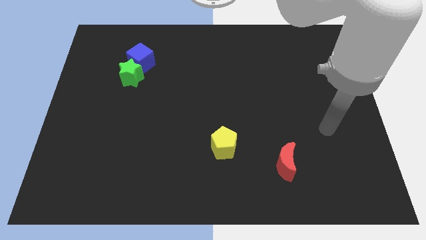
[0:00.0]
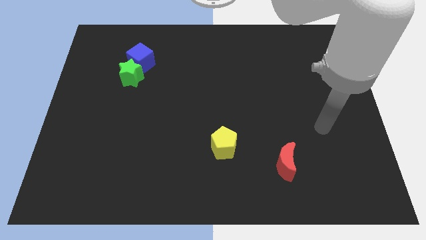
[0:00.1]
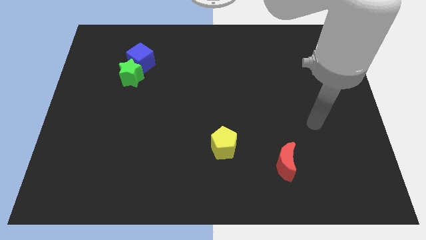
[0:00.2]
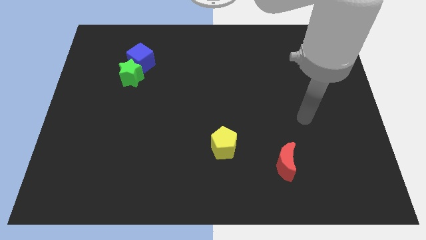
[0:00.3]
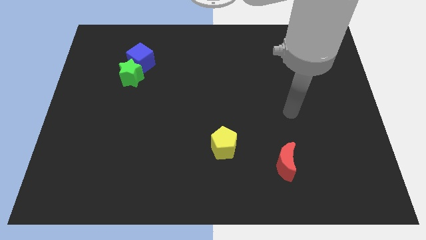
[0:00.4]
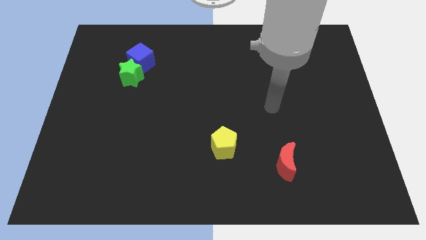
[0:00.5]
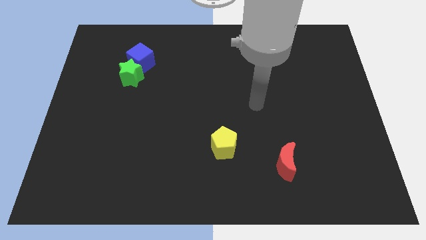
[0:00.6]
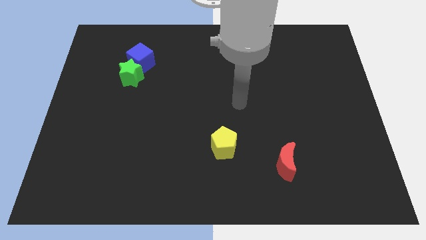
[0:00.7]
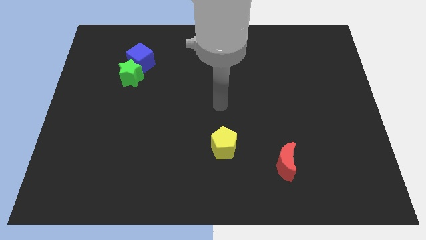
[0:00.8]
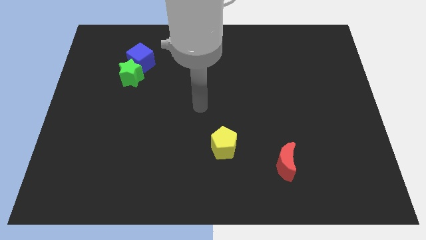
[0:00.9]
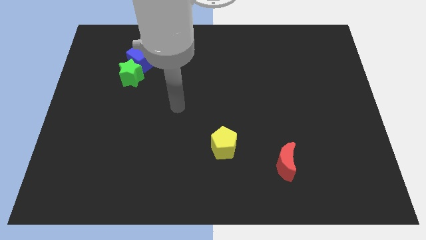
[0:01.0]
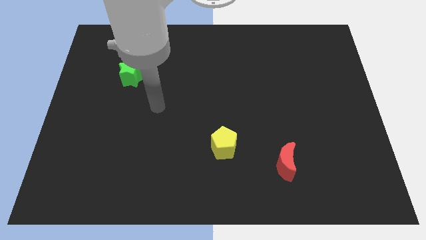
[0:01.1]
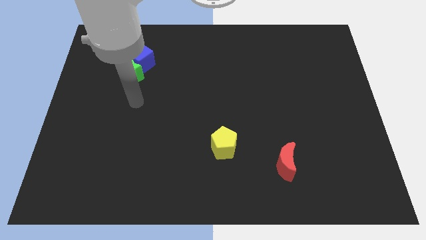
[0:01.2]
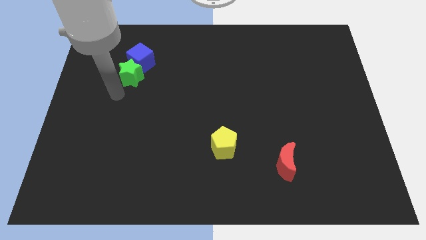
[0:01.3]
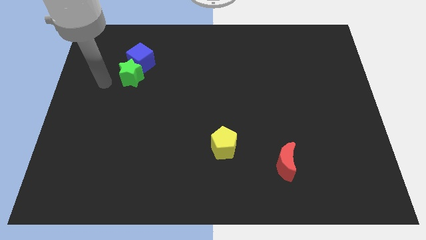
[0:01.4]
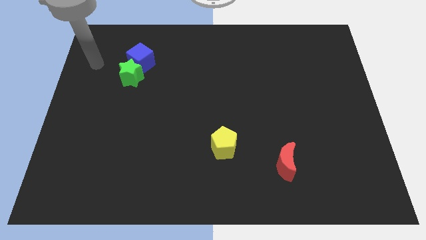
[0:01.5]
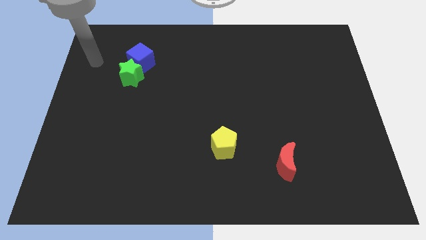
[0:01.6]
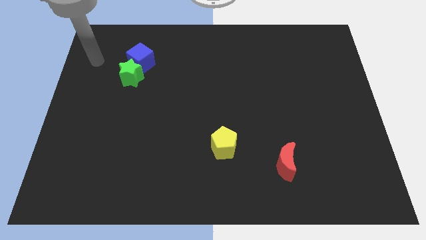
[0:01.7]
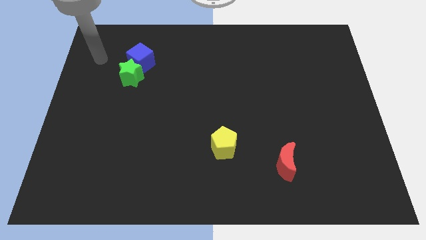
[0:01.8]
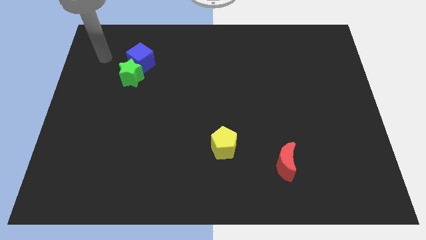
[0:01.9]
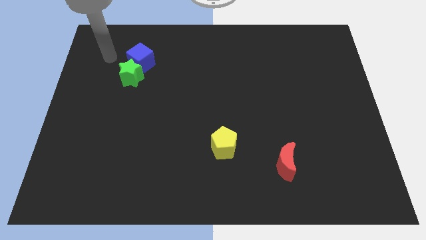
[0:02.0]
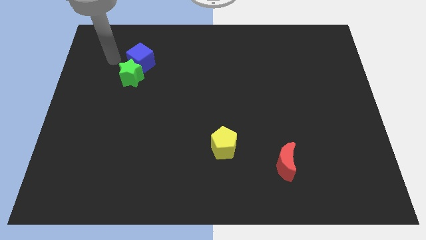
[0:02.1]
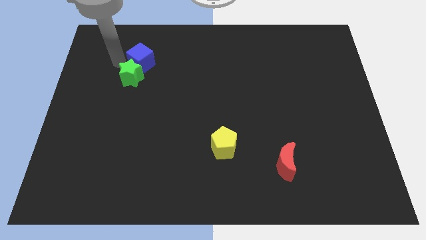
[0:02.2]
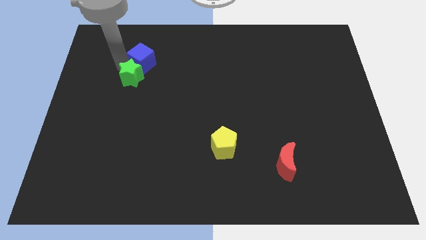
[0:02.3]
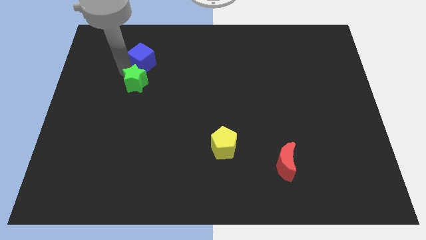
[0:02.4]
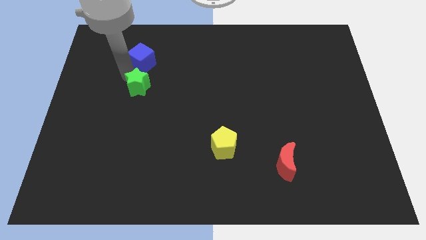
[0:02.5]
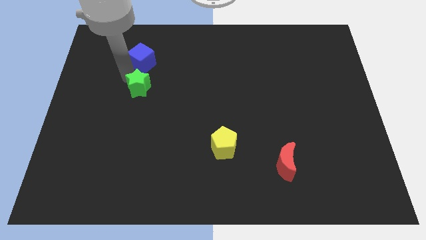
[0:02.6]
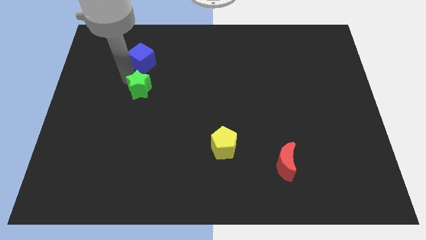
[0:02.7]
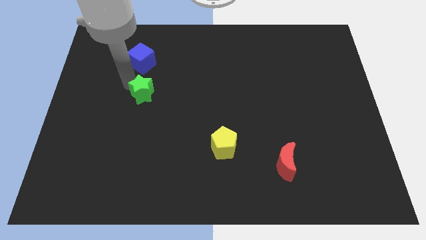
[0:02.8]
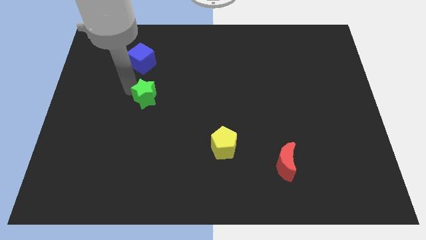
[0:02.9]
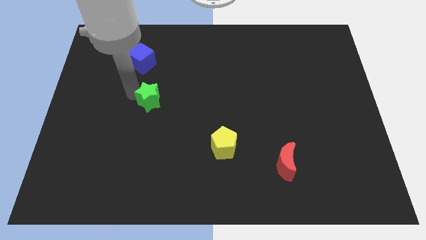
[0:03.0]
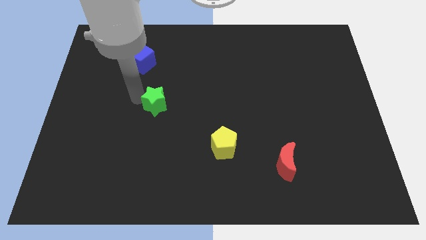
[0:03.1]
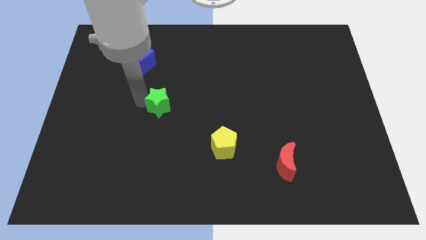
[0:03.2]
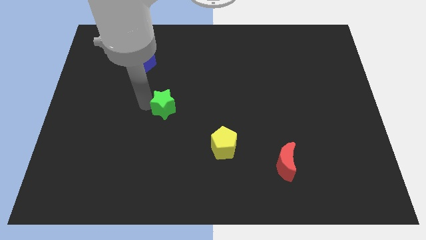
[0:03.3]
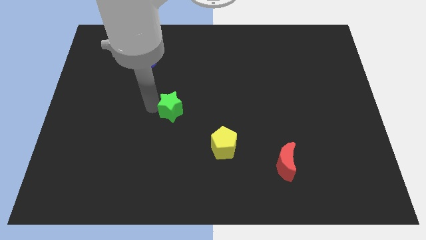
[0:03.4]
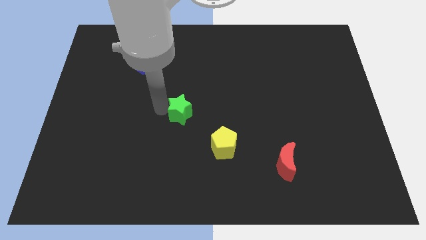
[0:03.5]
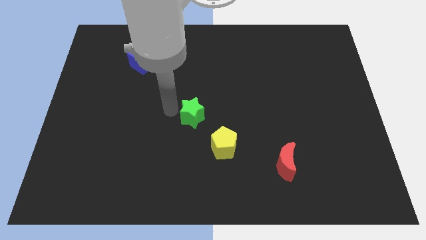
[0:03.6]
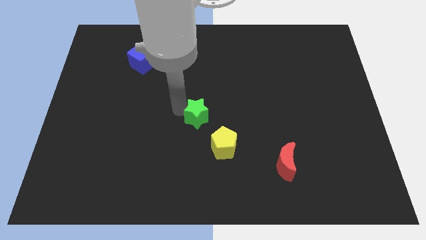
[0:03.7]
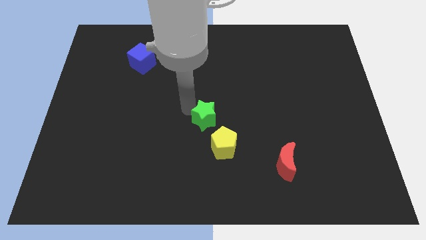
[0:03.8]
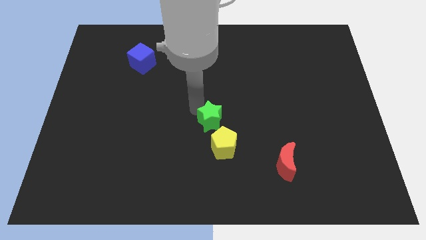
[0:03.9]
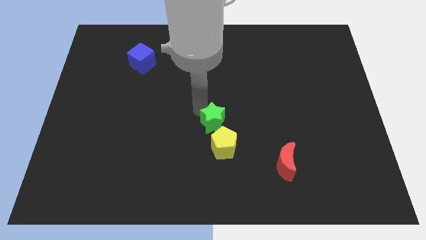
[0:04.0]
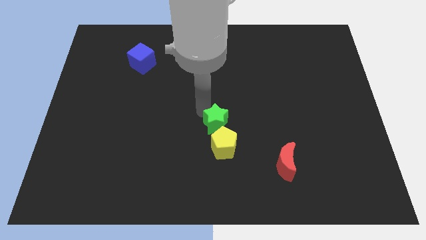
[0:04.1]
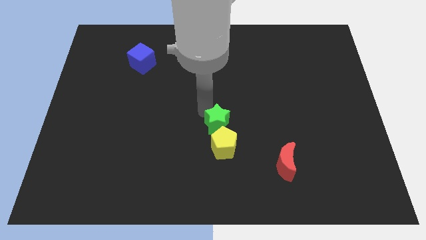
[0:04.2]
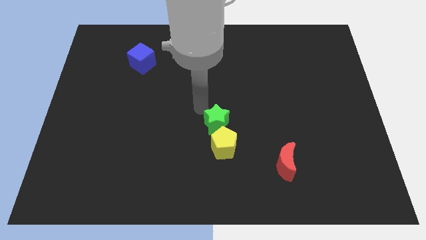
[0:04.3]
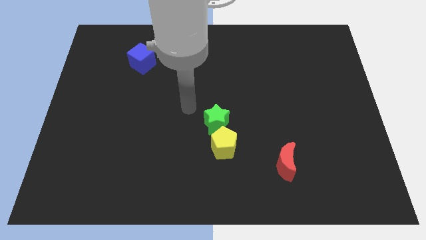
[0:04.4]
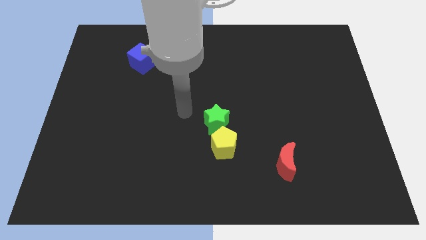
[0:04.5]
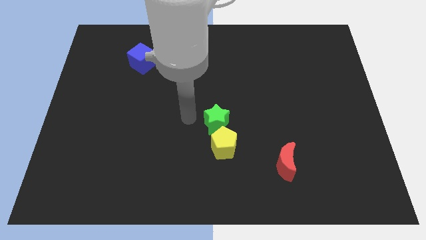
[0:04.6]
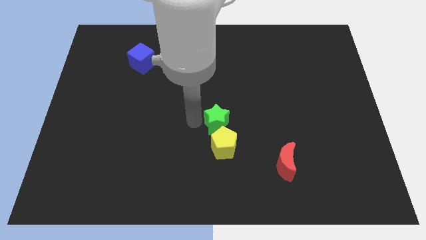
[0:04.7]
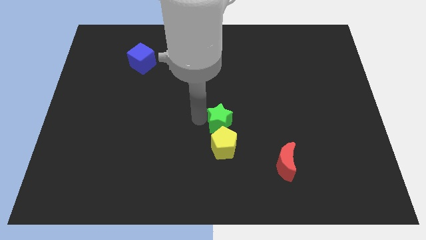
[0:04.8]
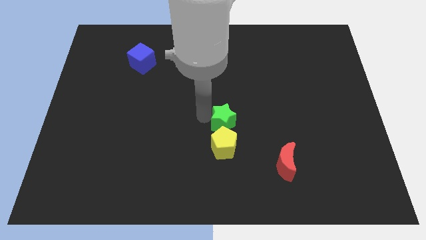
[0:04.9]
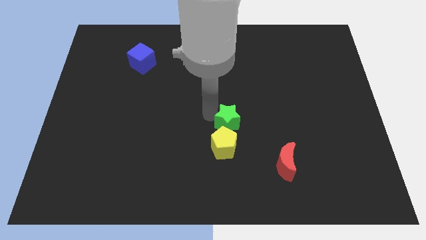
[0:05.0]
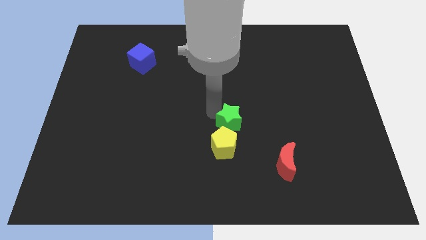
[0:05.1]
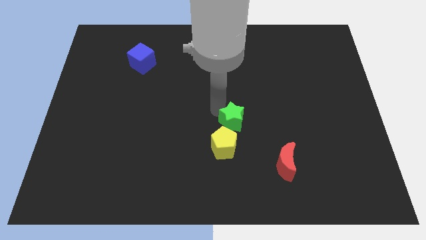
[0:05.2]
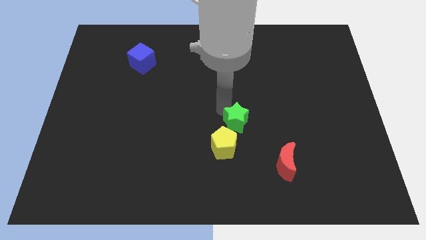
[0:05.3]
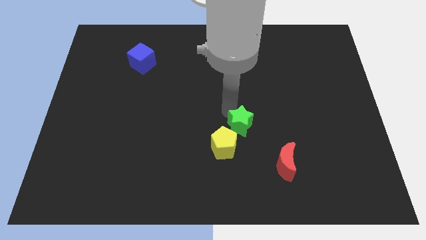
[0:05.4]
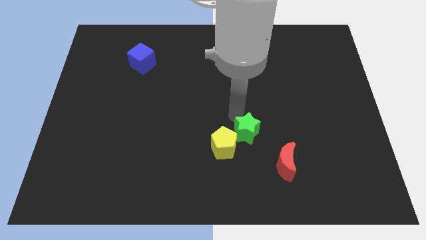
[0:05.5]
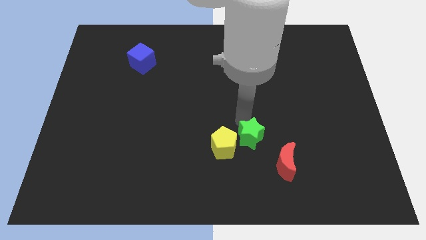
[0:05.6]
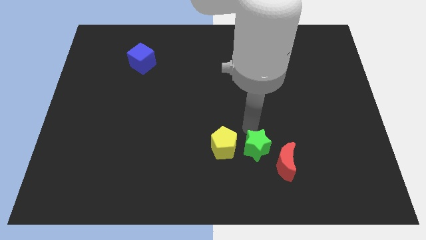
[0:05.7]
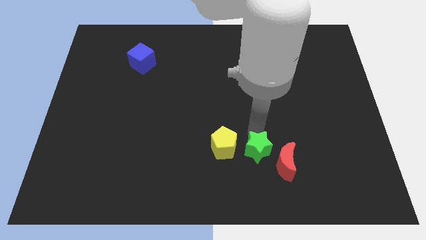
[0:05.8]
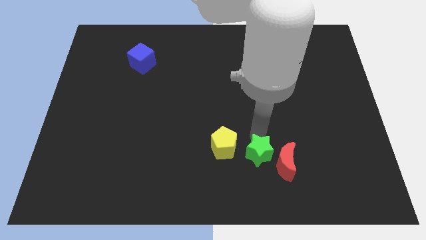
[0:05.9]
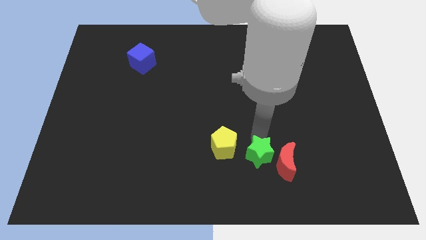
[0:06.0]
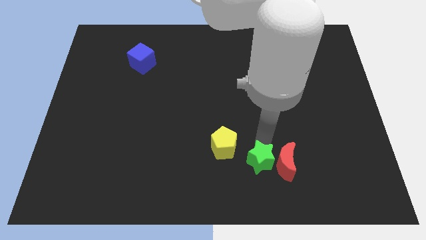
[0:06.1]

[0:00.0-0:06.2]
move the star next to the moon

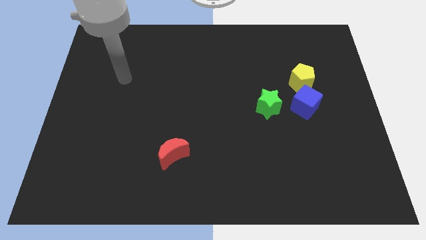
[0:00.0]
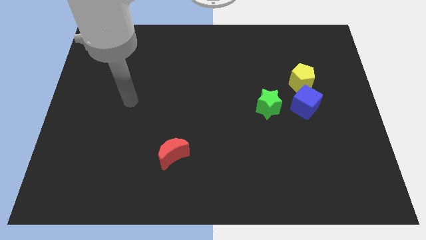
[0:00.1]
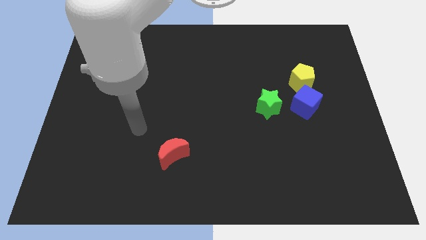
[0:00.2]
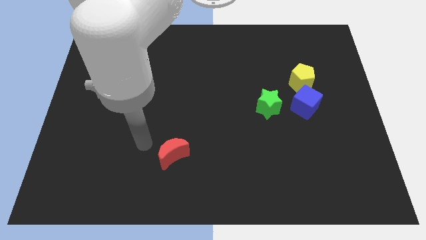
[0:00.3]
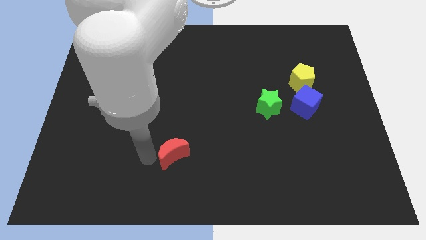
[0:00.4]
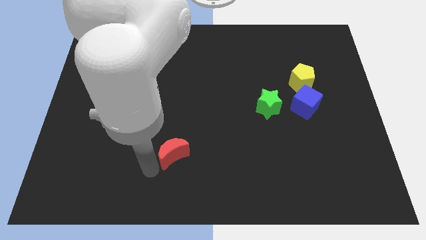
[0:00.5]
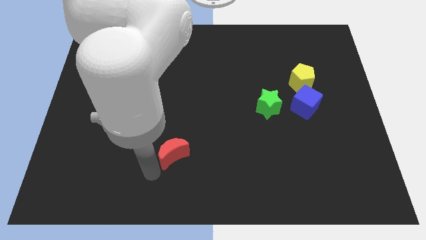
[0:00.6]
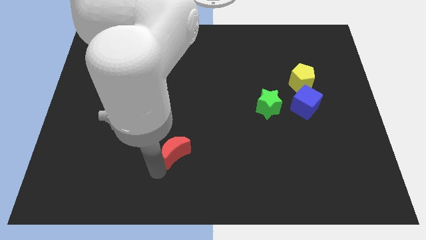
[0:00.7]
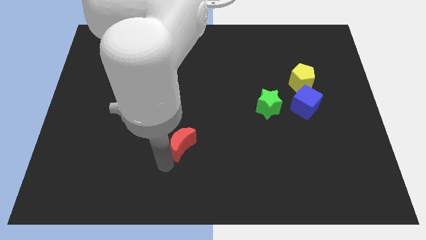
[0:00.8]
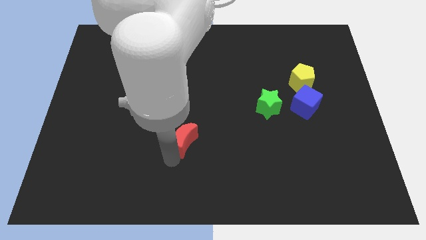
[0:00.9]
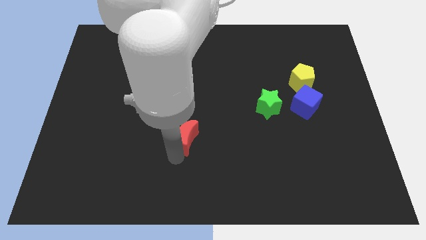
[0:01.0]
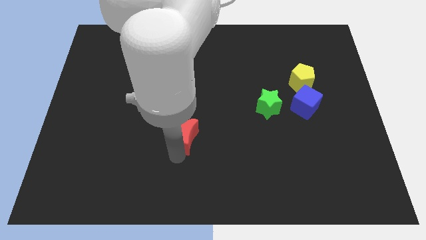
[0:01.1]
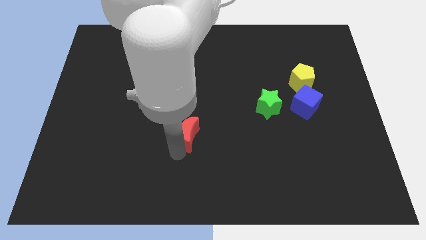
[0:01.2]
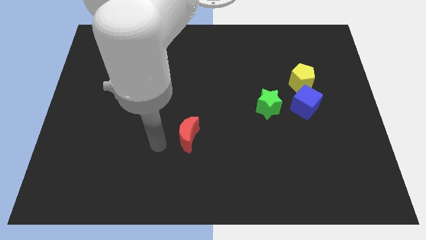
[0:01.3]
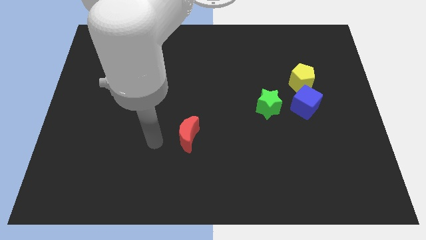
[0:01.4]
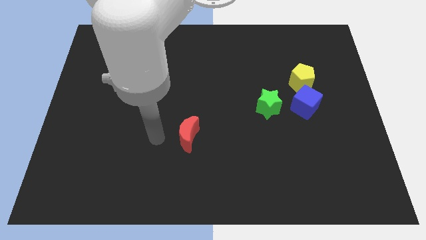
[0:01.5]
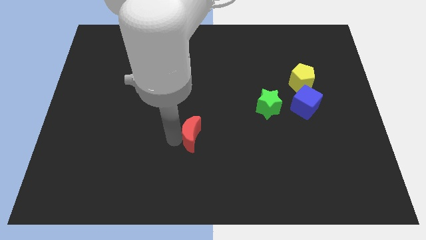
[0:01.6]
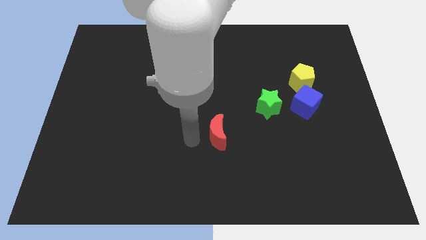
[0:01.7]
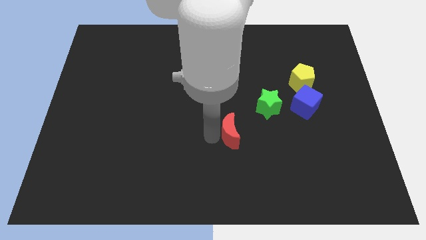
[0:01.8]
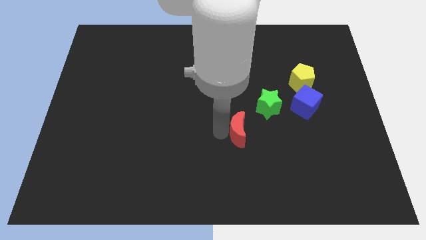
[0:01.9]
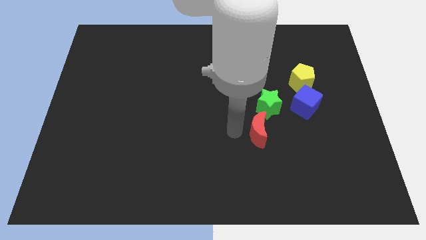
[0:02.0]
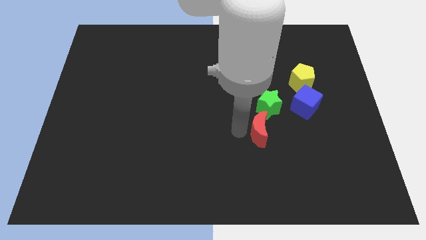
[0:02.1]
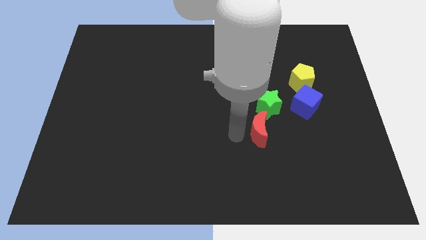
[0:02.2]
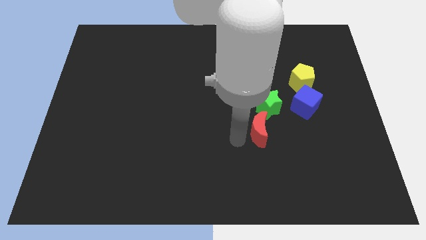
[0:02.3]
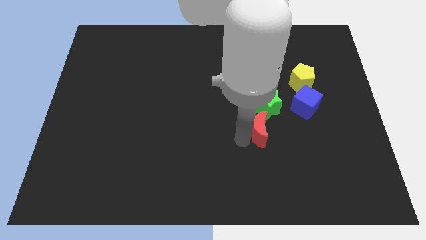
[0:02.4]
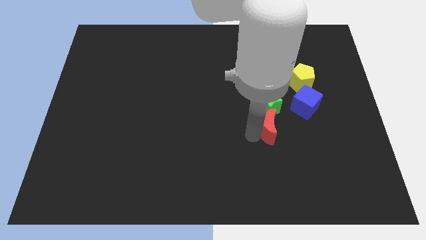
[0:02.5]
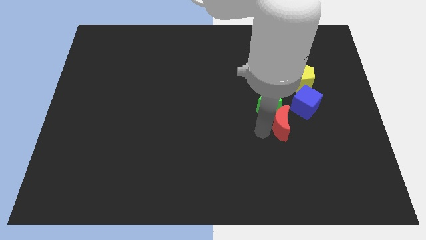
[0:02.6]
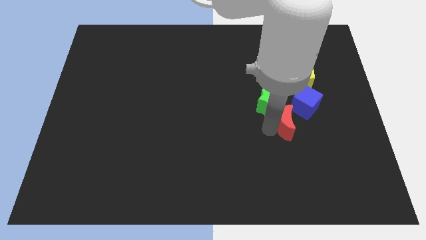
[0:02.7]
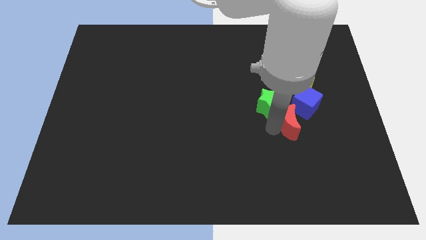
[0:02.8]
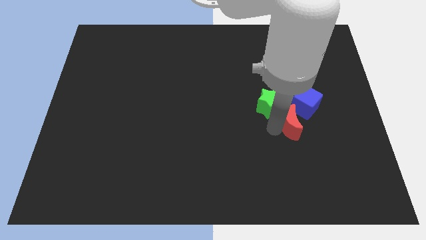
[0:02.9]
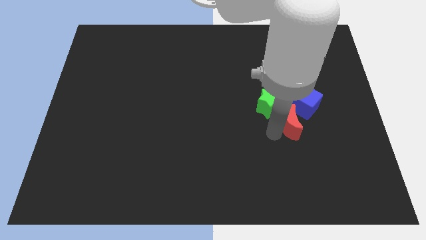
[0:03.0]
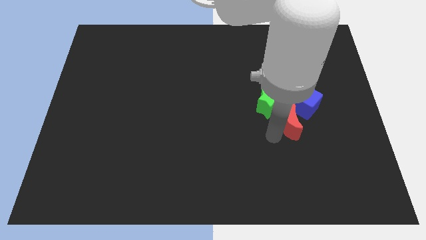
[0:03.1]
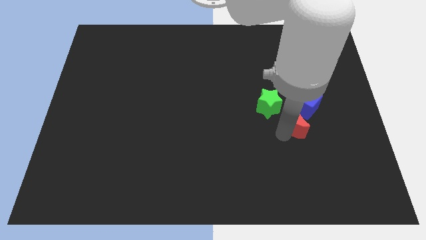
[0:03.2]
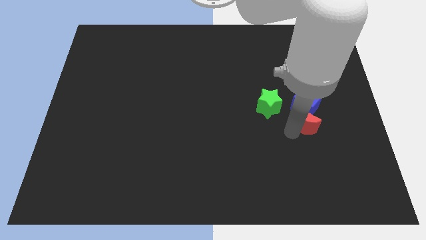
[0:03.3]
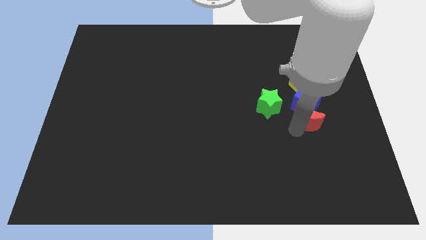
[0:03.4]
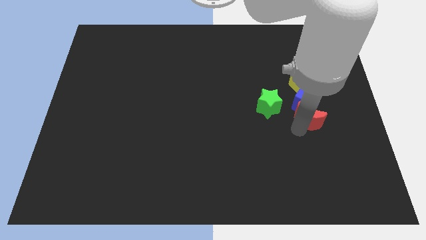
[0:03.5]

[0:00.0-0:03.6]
put the red block next to the cube
